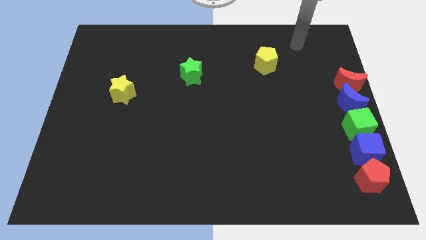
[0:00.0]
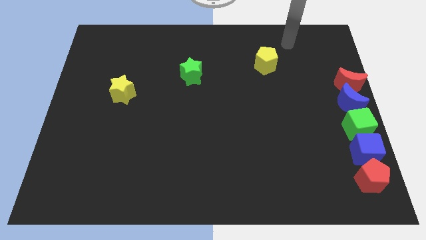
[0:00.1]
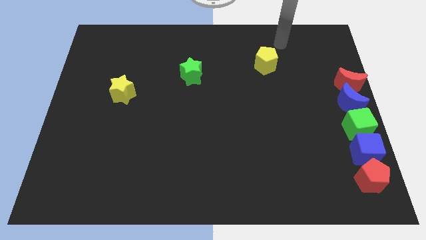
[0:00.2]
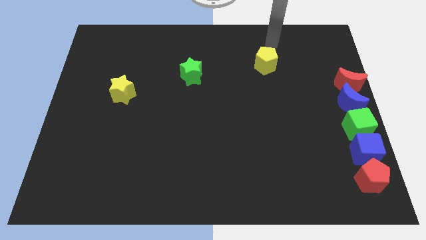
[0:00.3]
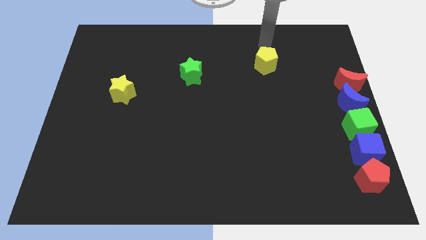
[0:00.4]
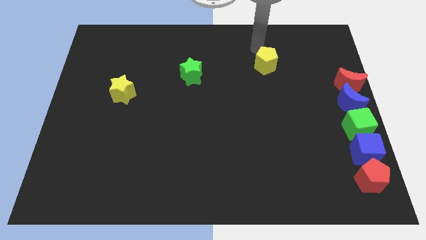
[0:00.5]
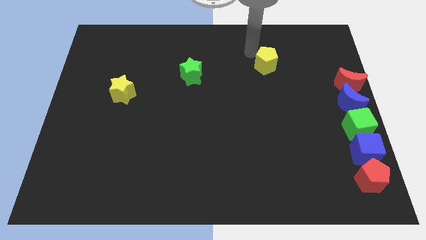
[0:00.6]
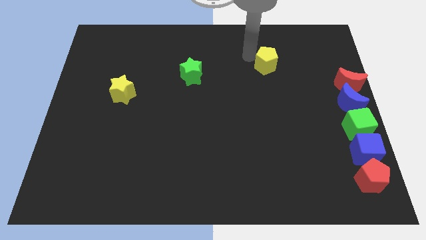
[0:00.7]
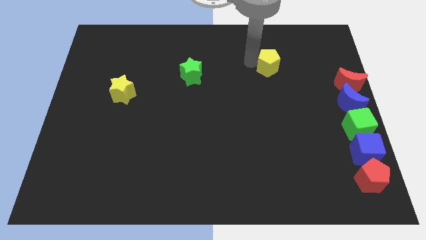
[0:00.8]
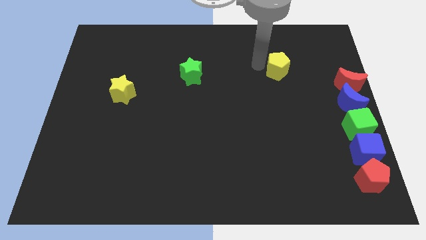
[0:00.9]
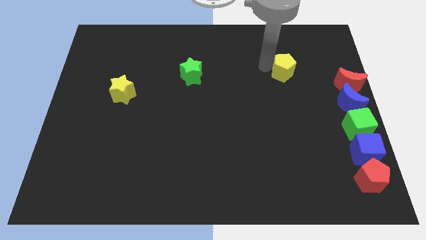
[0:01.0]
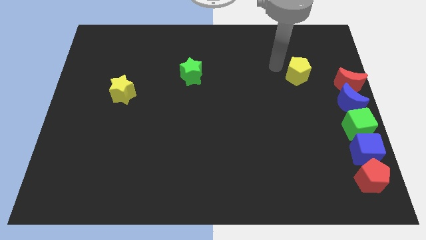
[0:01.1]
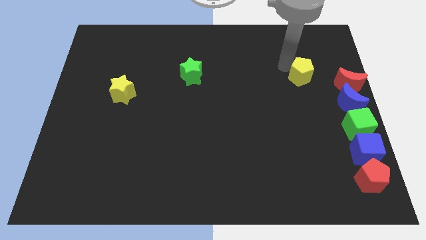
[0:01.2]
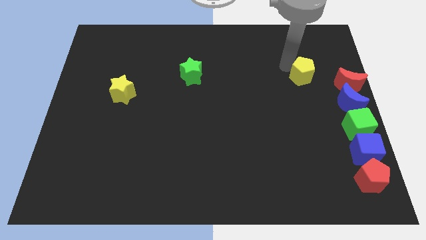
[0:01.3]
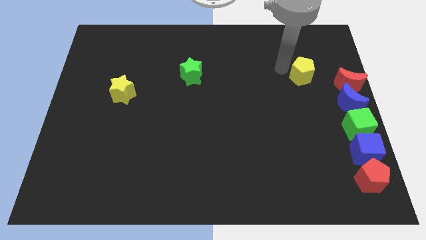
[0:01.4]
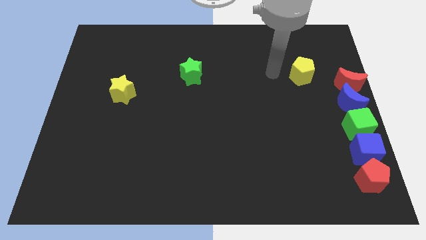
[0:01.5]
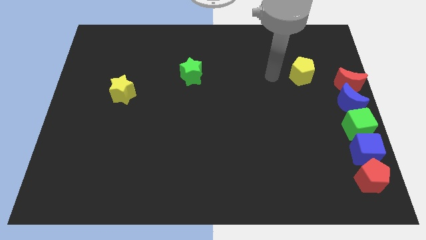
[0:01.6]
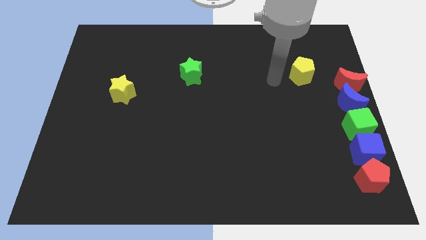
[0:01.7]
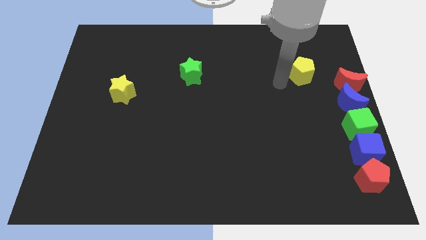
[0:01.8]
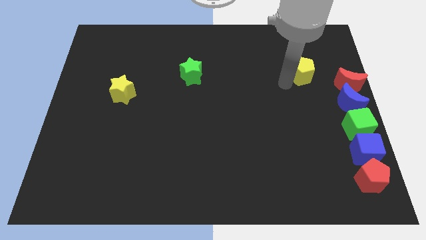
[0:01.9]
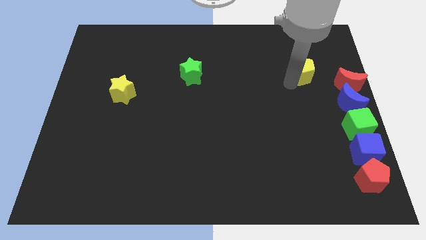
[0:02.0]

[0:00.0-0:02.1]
slide yellow pentagon to top left of red moon

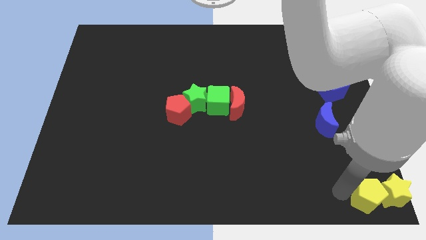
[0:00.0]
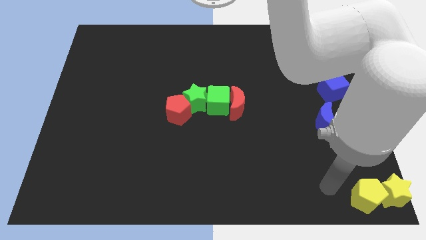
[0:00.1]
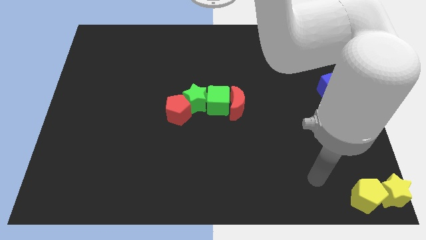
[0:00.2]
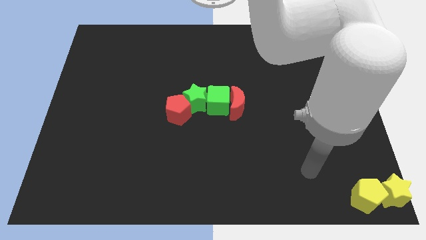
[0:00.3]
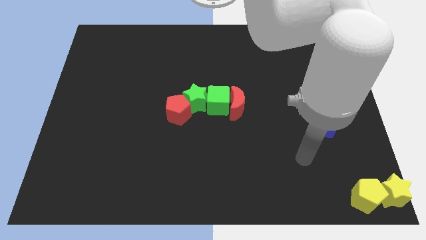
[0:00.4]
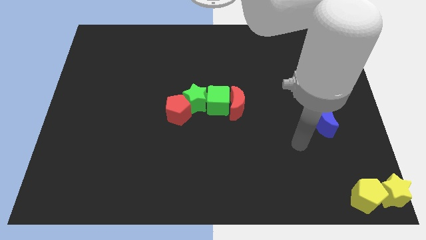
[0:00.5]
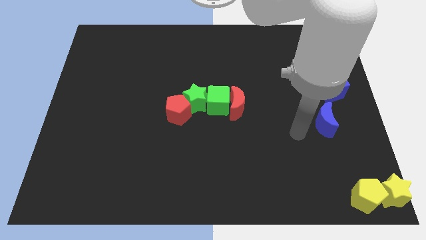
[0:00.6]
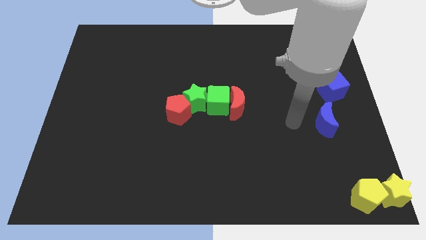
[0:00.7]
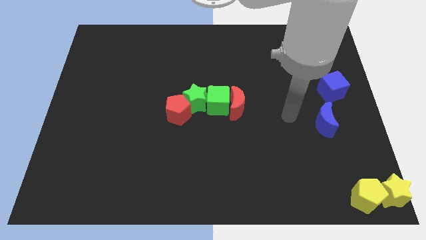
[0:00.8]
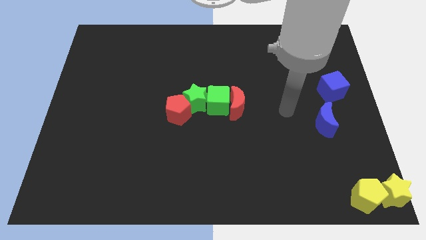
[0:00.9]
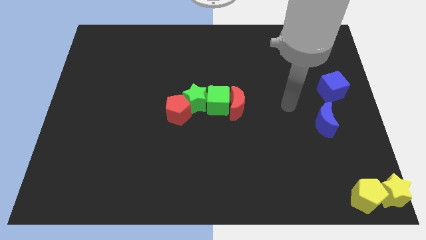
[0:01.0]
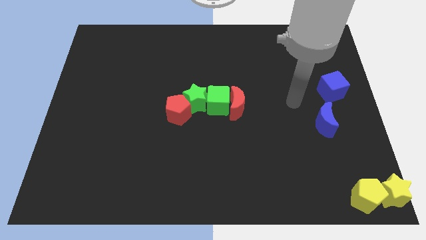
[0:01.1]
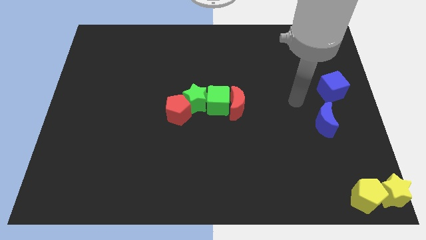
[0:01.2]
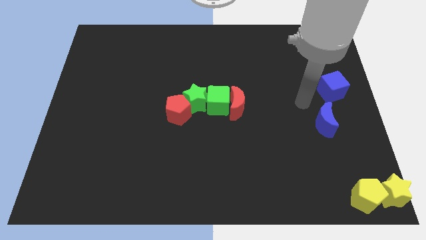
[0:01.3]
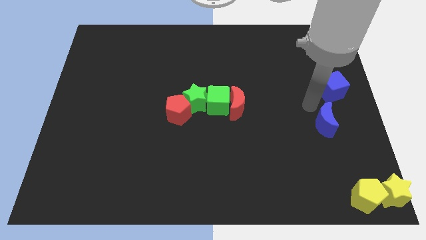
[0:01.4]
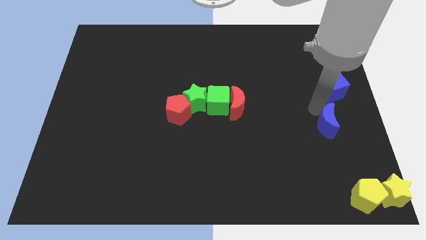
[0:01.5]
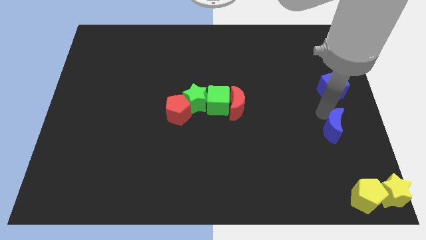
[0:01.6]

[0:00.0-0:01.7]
touch at the left side of the blue crescent

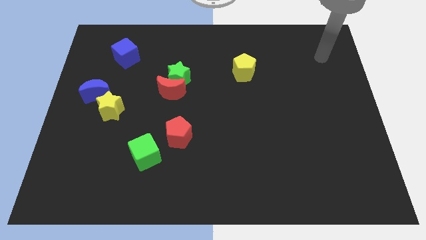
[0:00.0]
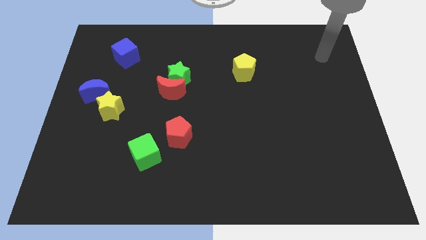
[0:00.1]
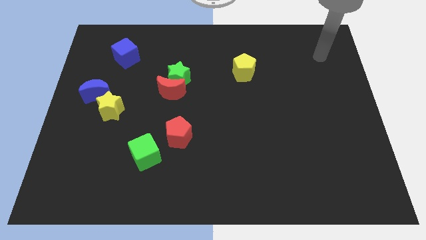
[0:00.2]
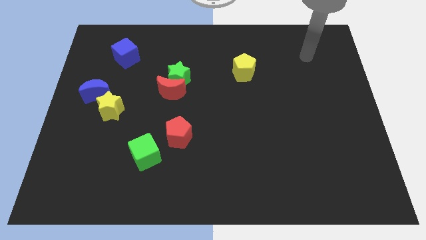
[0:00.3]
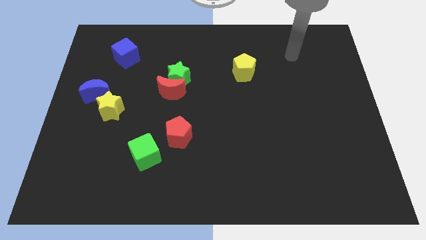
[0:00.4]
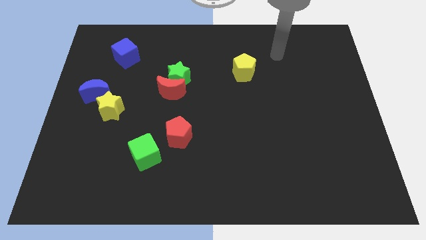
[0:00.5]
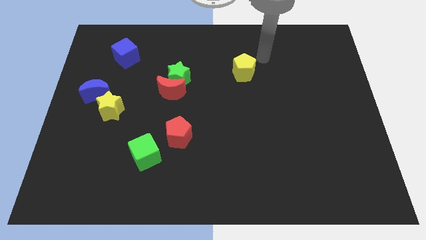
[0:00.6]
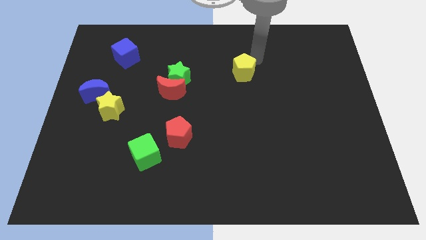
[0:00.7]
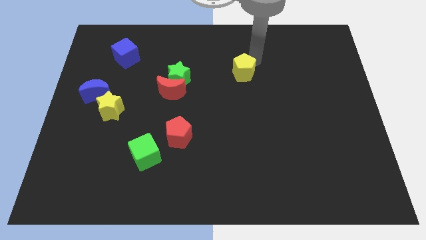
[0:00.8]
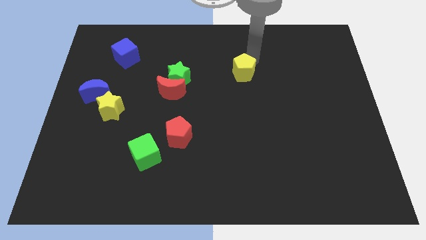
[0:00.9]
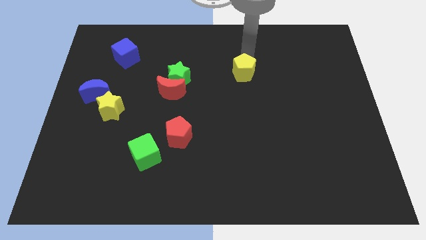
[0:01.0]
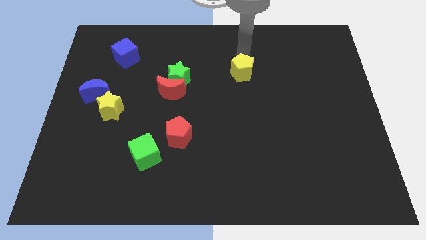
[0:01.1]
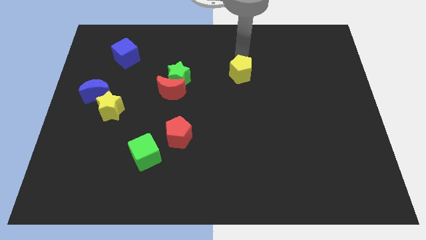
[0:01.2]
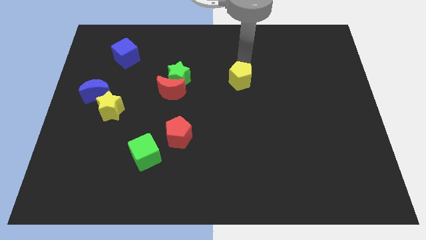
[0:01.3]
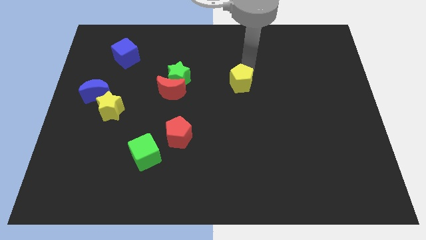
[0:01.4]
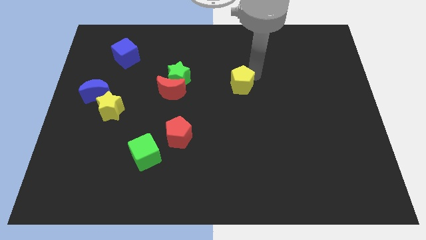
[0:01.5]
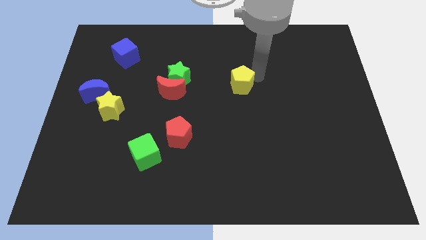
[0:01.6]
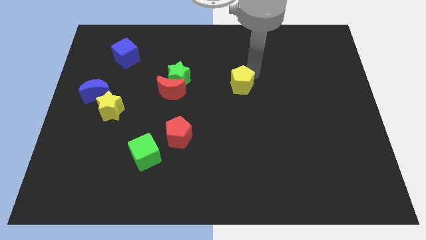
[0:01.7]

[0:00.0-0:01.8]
slide the yellow pentagon parallel right to the green star

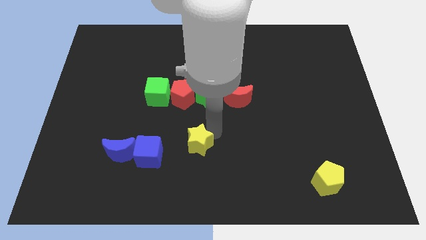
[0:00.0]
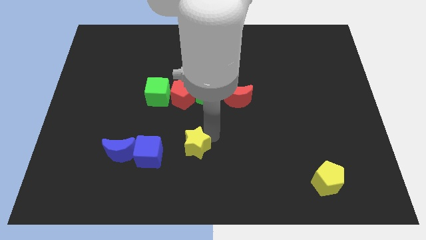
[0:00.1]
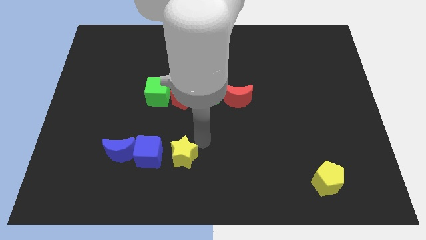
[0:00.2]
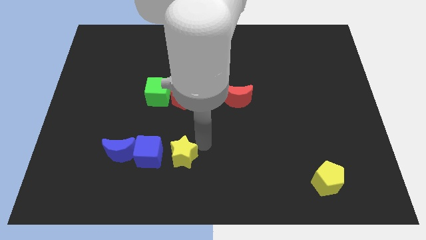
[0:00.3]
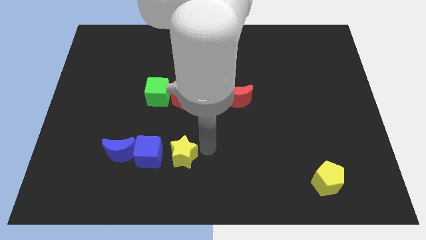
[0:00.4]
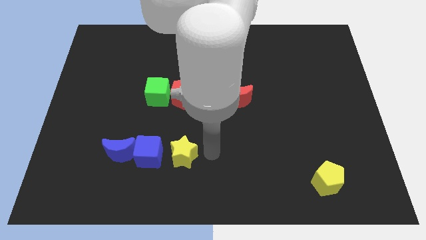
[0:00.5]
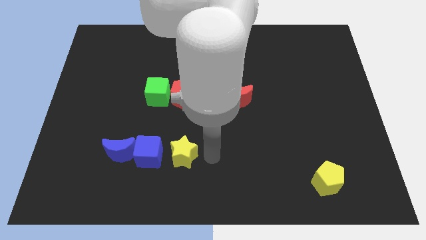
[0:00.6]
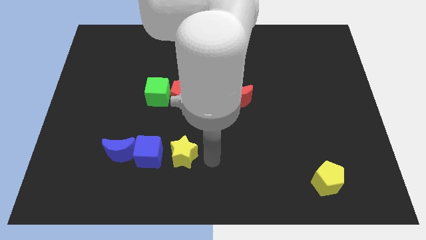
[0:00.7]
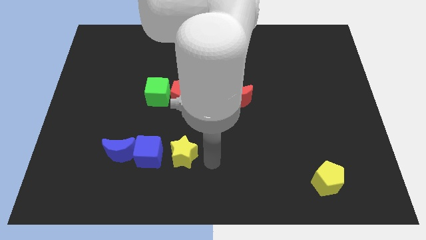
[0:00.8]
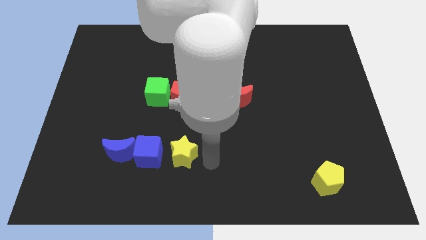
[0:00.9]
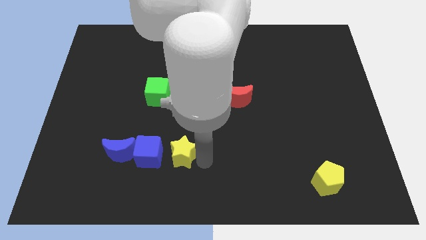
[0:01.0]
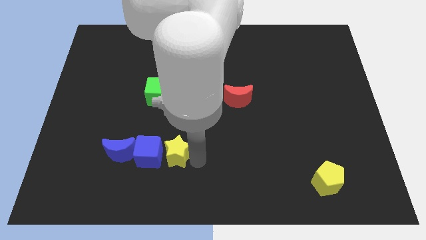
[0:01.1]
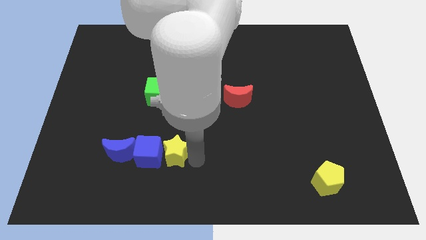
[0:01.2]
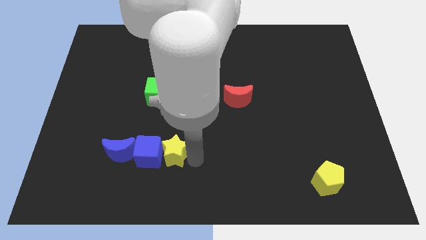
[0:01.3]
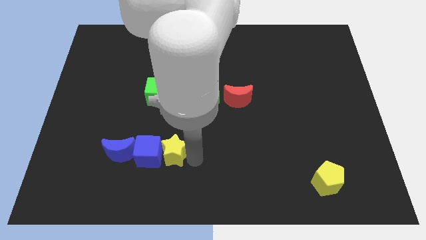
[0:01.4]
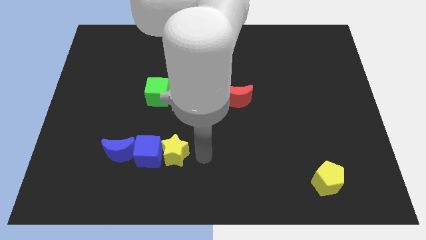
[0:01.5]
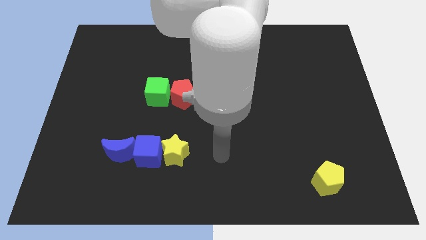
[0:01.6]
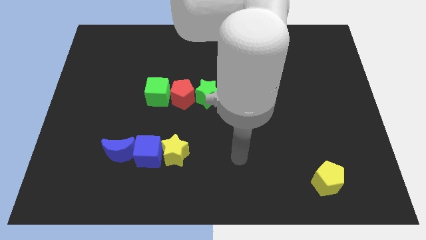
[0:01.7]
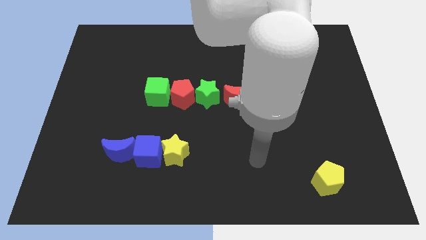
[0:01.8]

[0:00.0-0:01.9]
move the yellow star into the blue cube

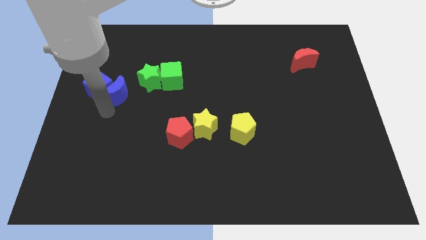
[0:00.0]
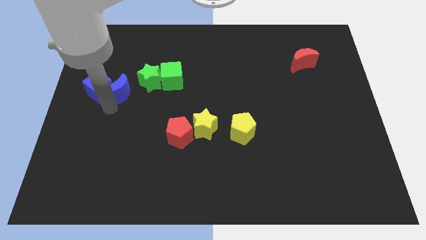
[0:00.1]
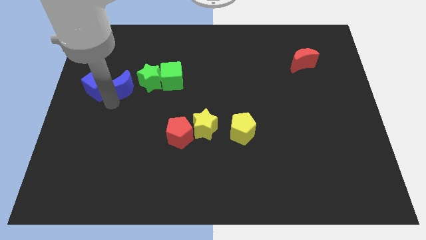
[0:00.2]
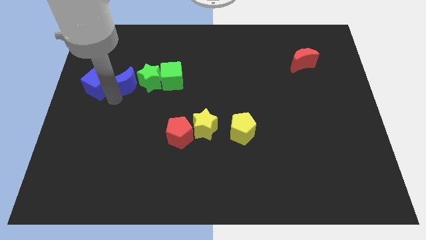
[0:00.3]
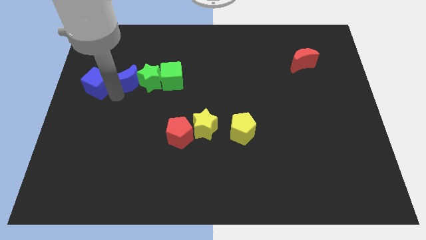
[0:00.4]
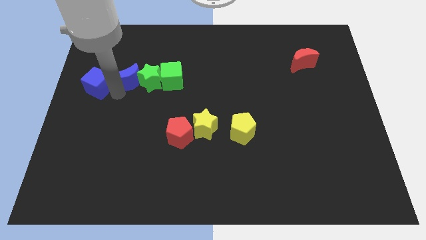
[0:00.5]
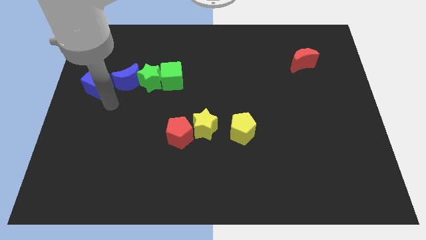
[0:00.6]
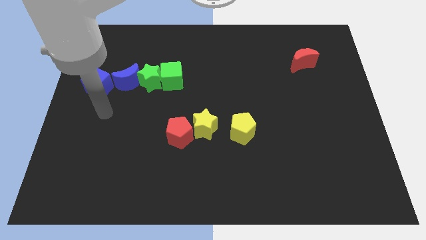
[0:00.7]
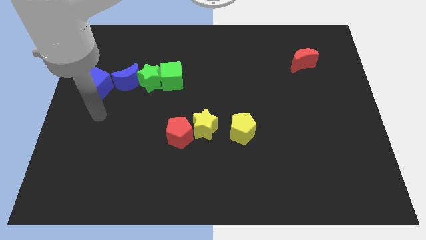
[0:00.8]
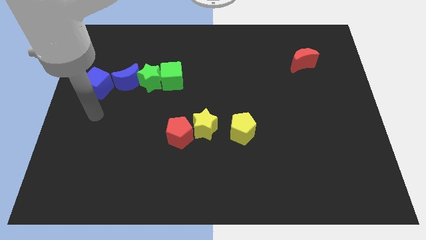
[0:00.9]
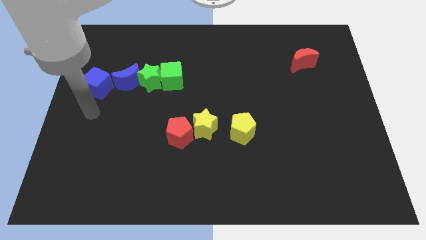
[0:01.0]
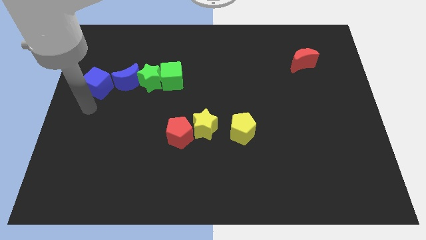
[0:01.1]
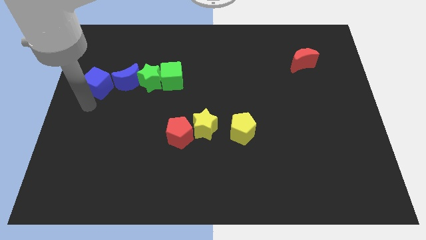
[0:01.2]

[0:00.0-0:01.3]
place the blue crescent in between the blue cube and the green star

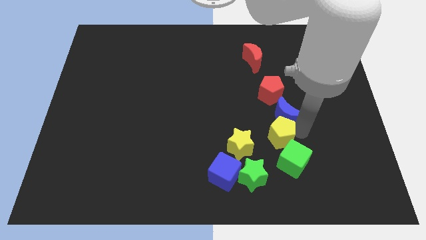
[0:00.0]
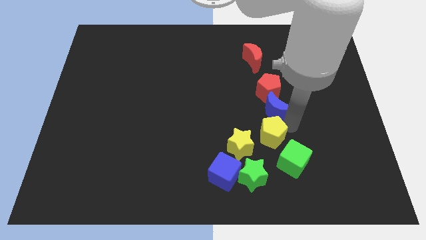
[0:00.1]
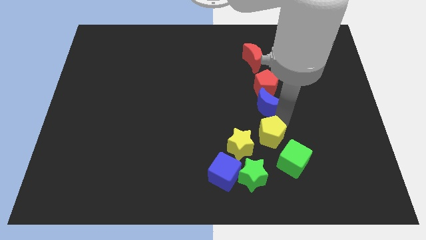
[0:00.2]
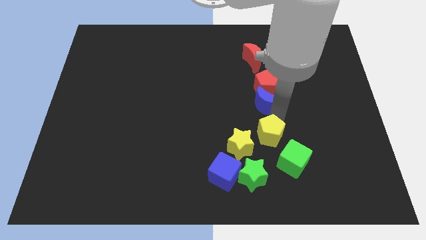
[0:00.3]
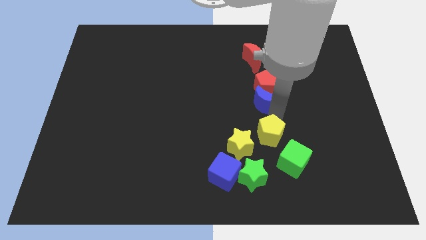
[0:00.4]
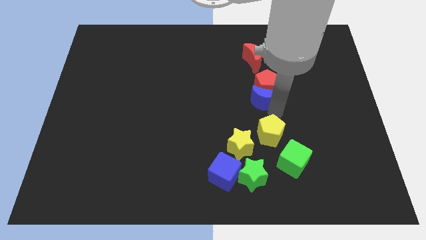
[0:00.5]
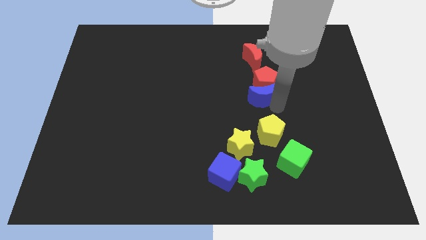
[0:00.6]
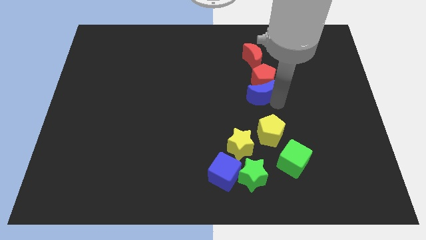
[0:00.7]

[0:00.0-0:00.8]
move the blue crescent into the red pentagon
